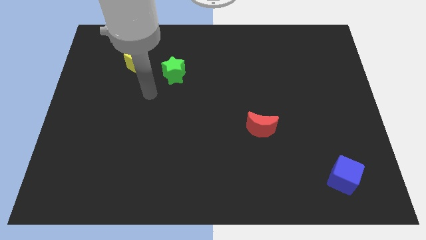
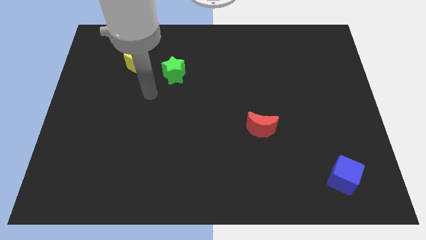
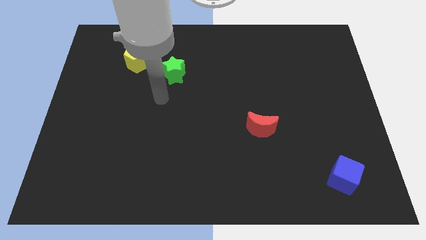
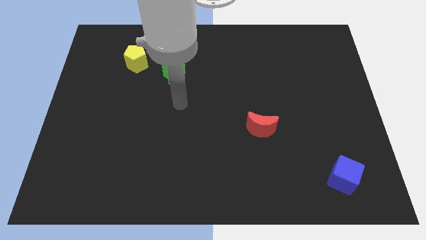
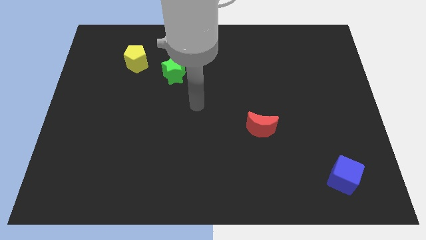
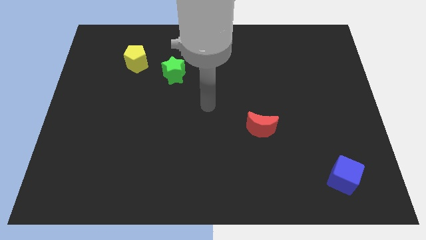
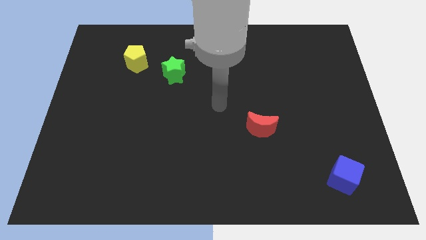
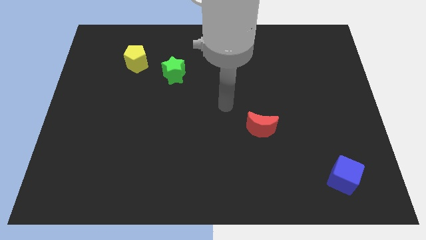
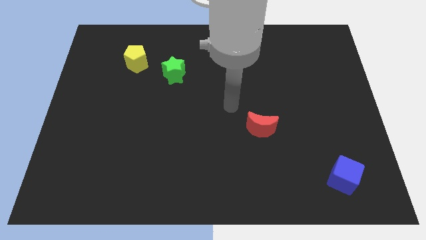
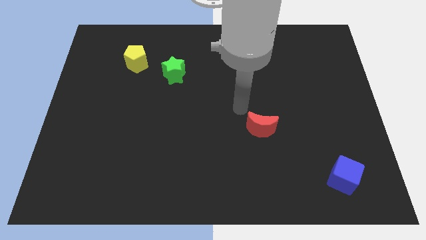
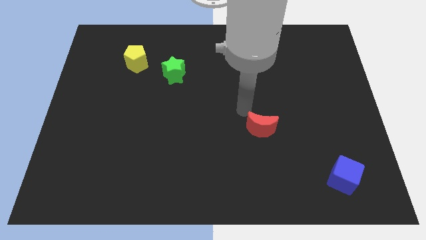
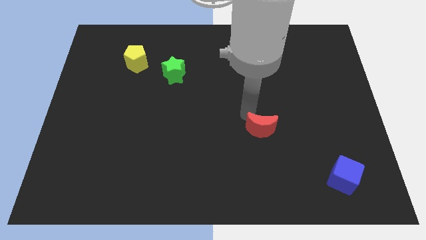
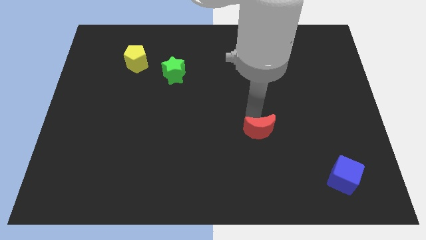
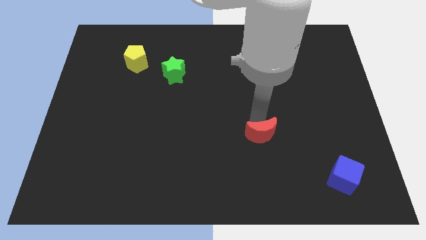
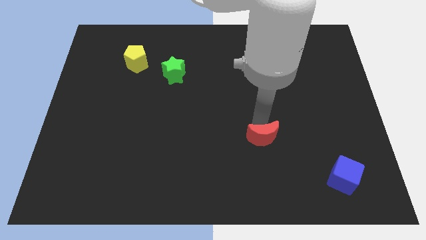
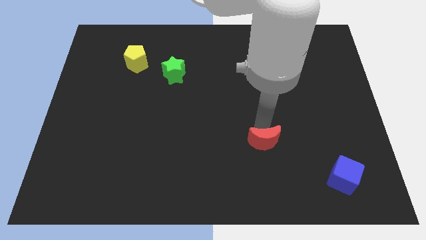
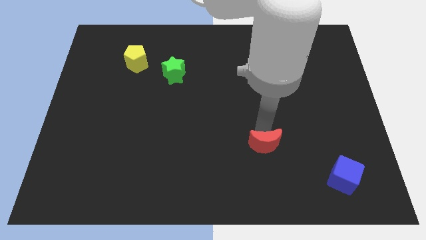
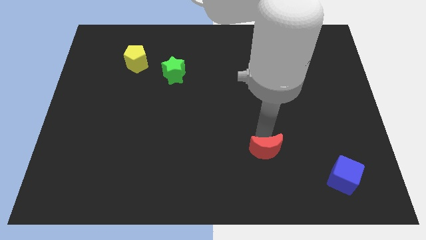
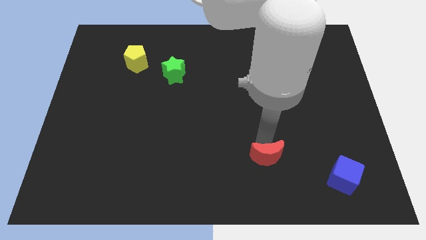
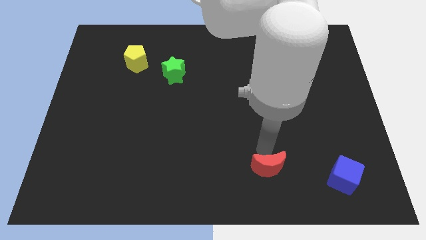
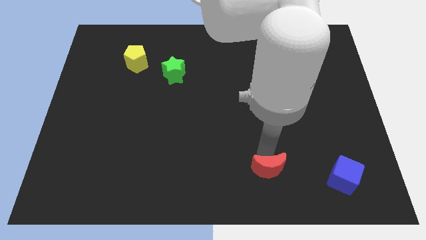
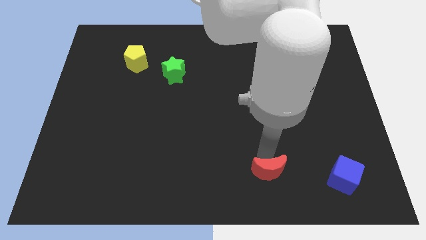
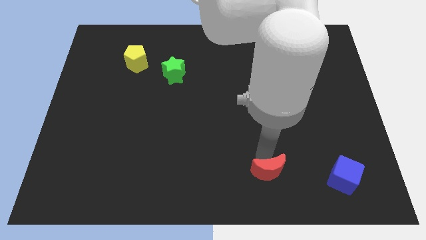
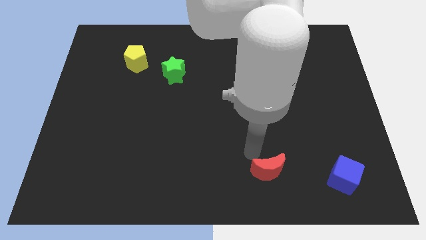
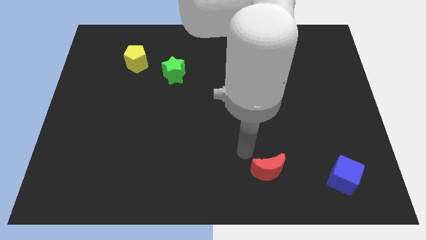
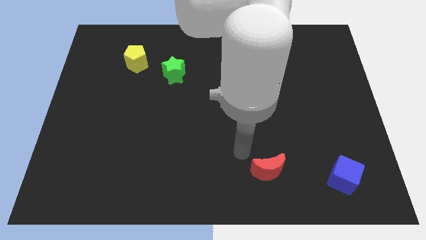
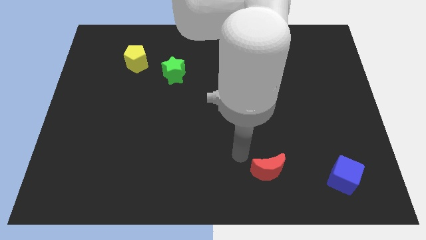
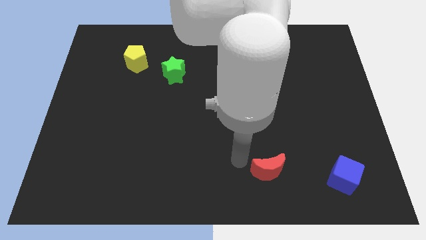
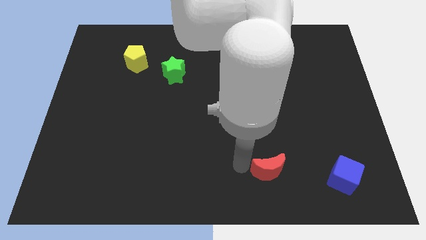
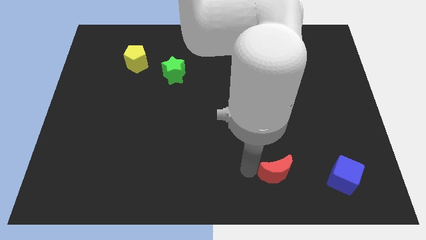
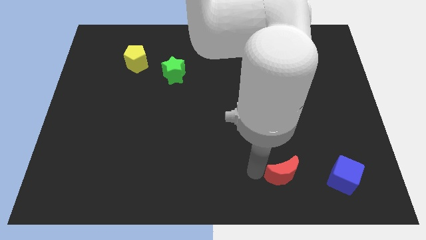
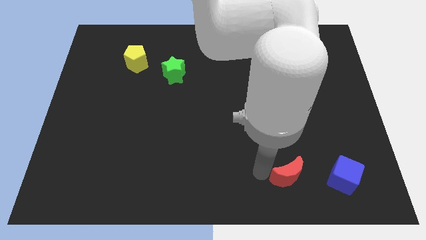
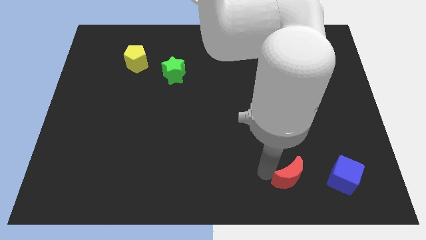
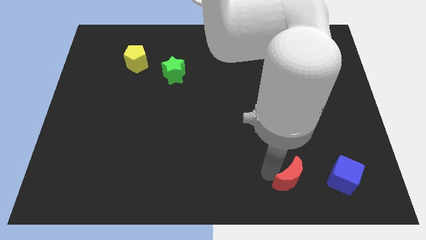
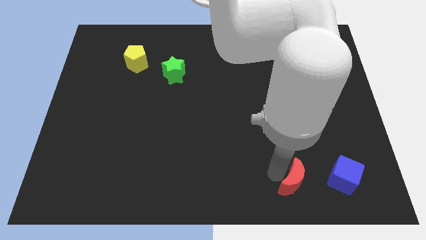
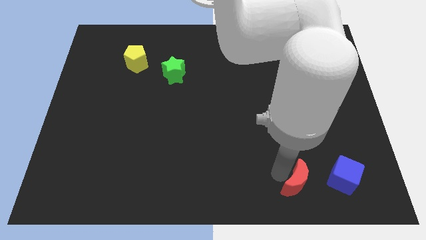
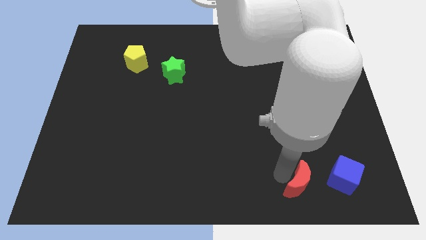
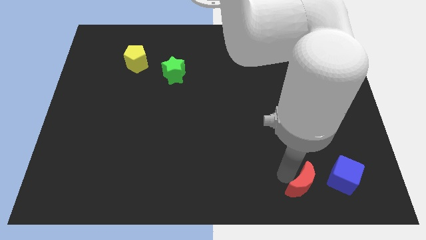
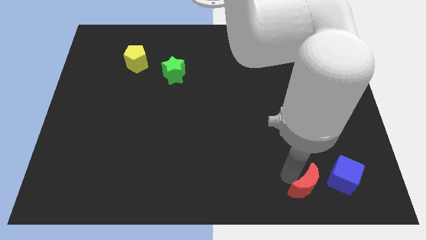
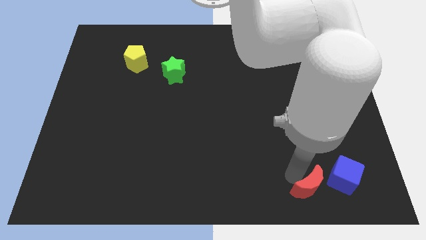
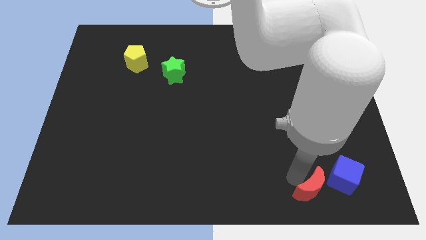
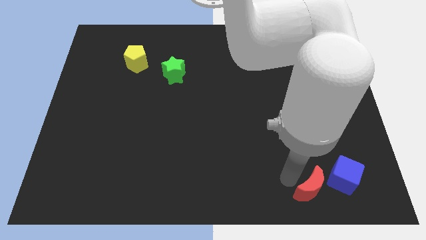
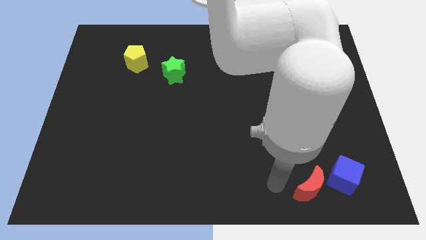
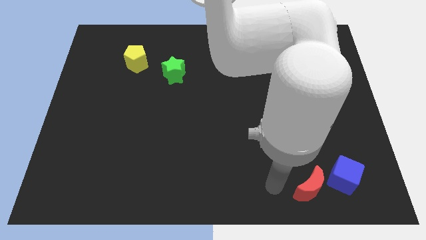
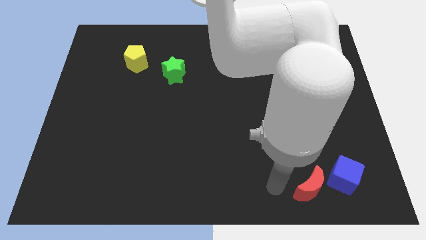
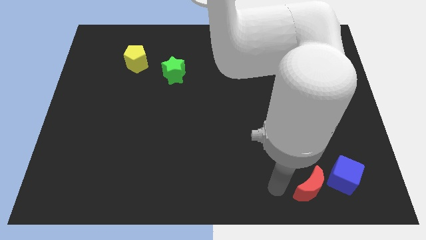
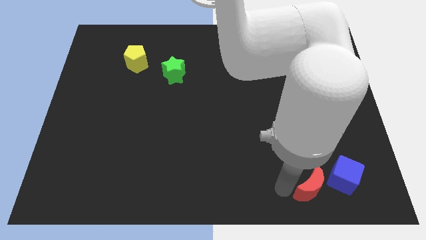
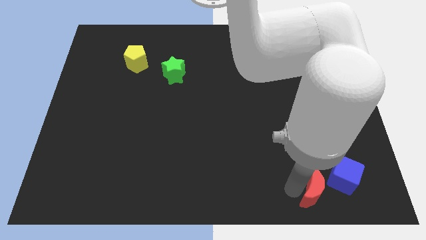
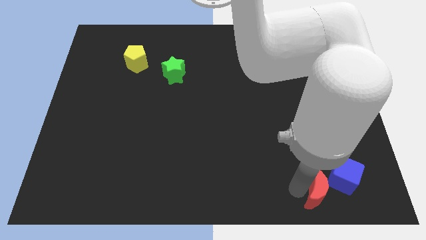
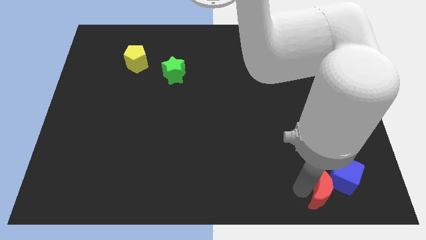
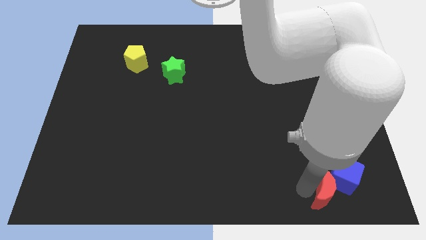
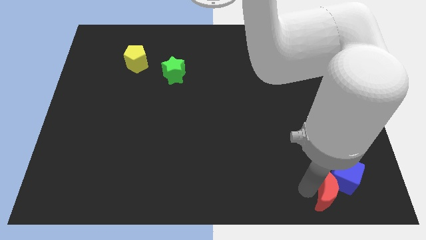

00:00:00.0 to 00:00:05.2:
move the red block to the cube

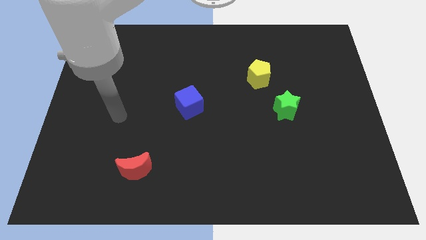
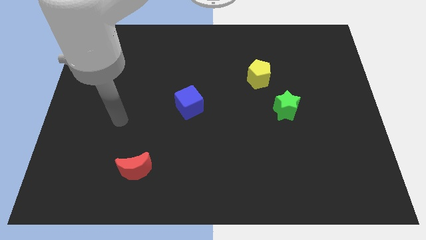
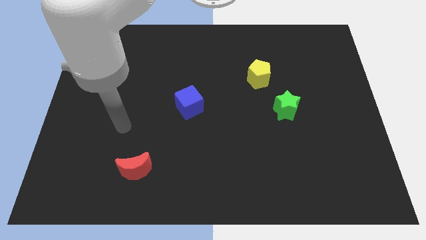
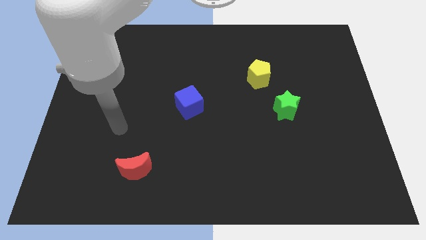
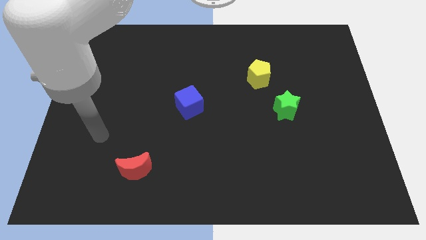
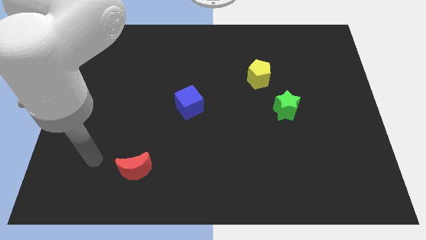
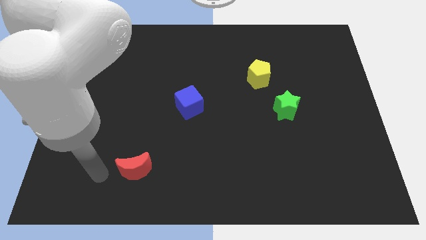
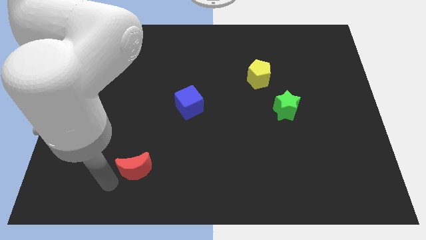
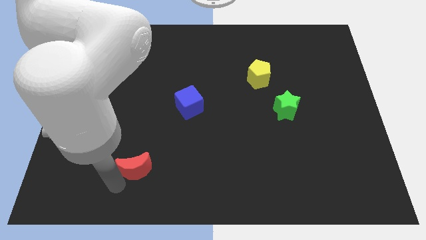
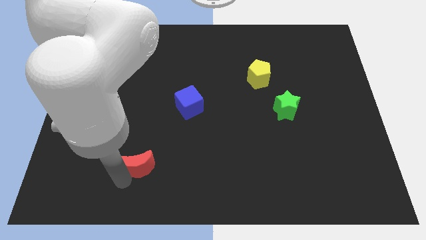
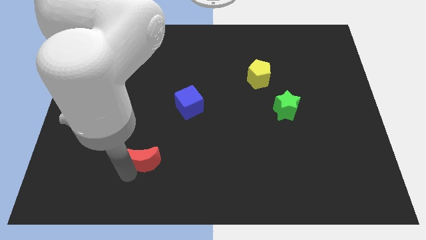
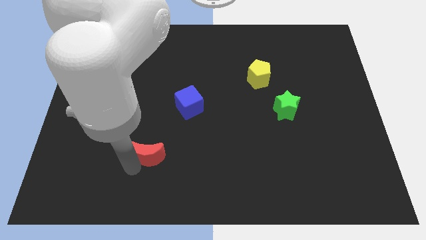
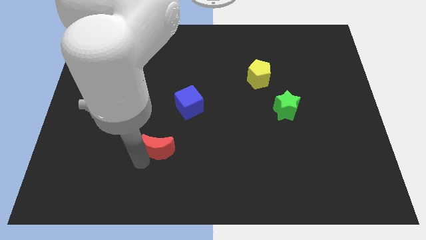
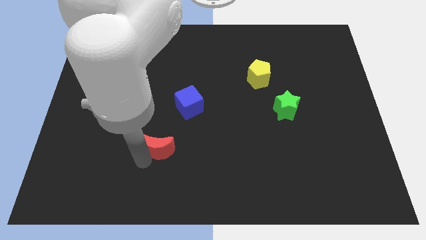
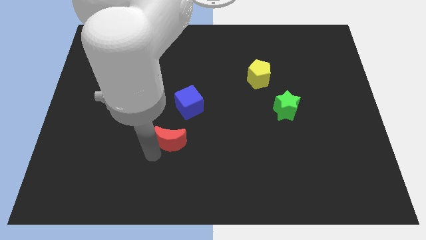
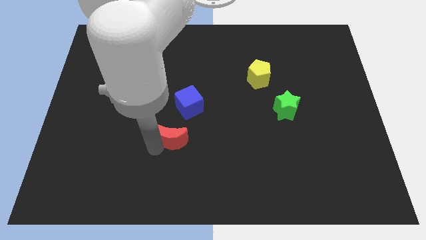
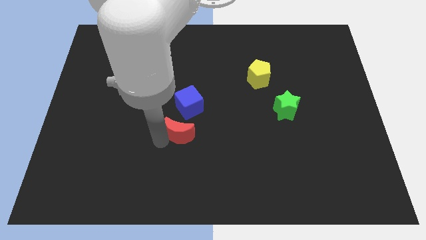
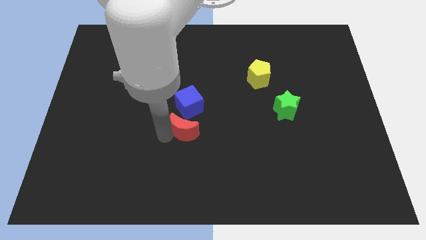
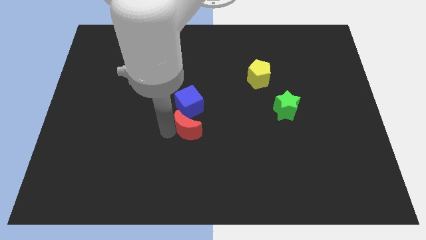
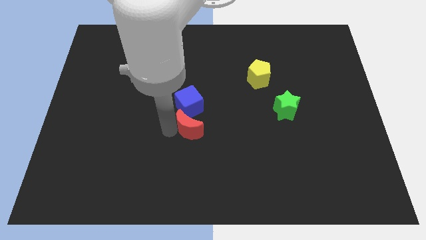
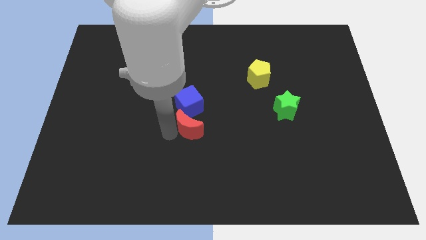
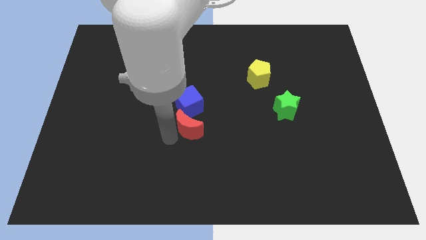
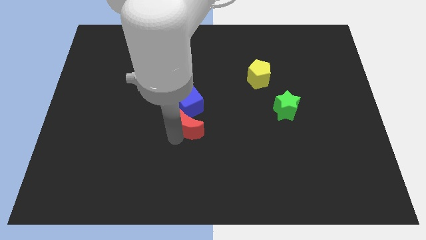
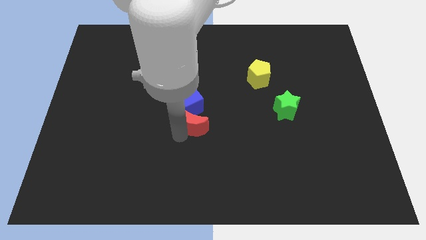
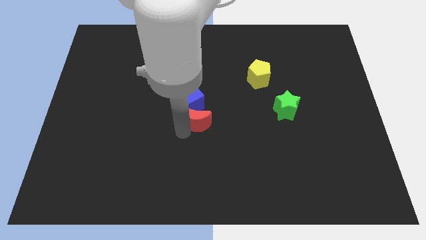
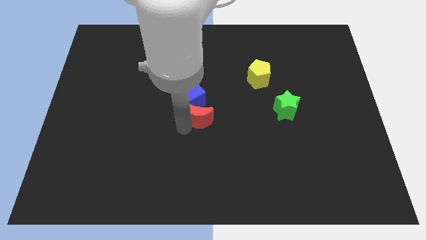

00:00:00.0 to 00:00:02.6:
put the moon close to the blue block

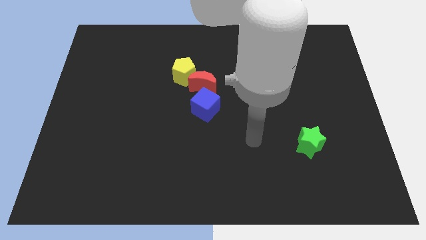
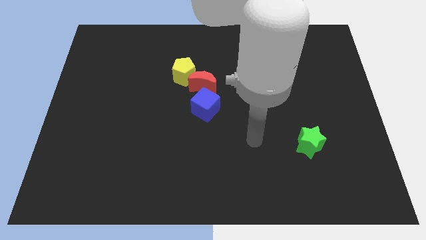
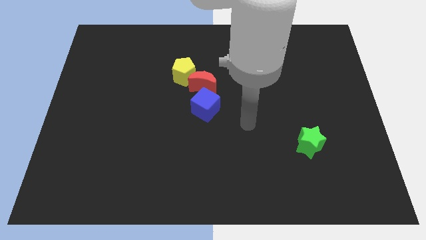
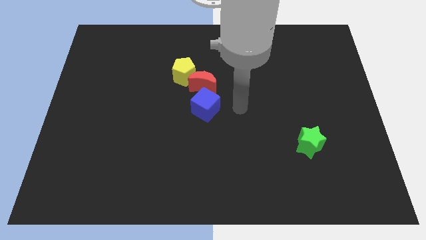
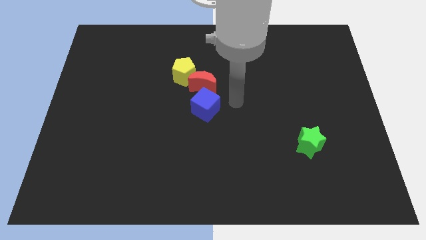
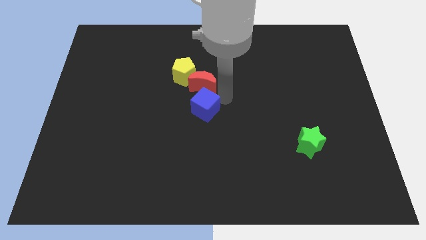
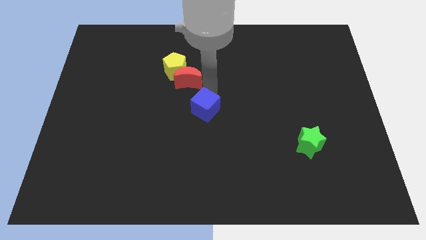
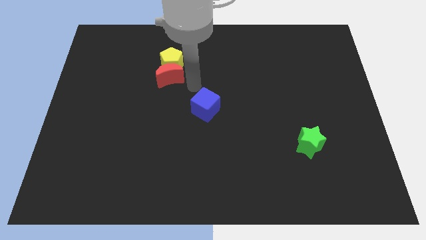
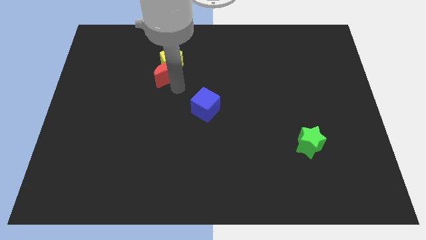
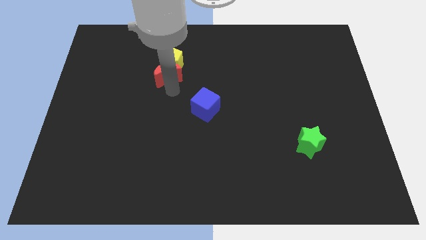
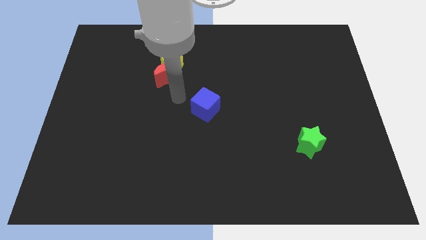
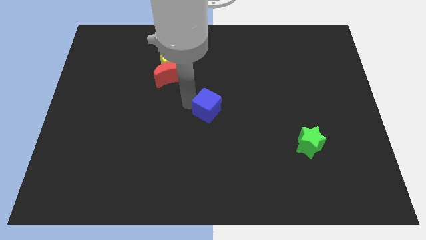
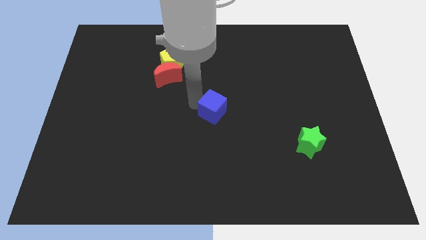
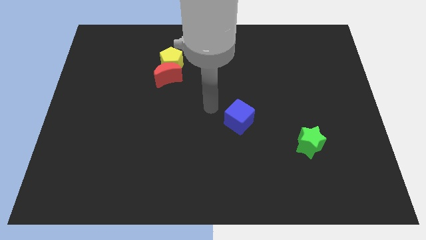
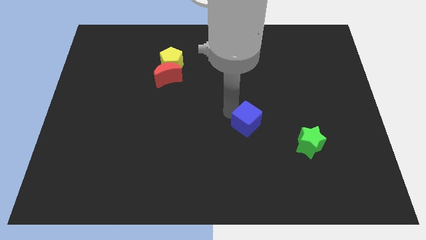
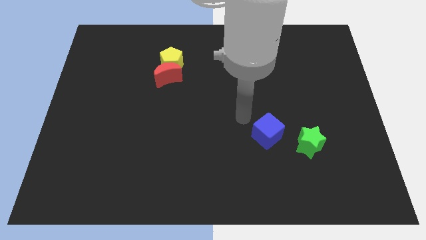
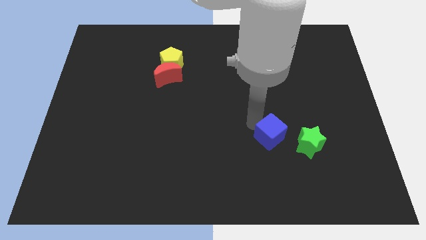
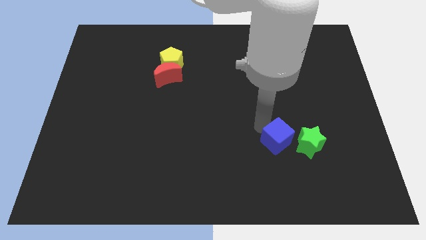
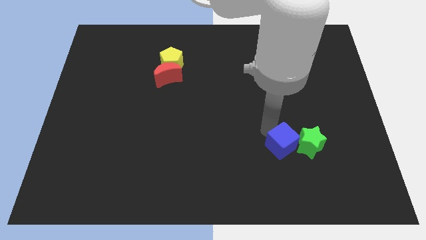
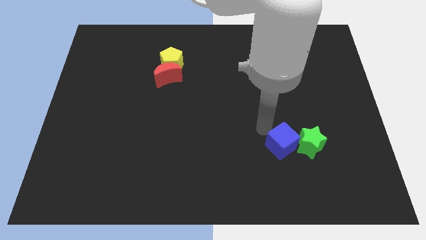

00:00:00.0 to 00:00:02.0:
put the blue cube close to the green block
